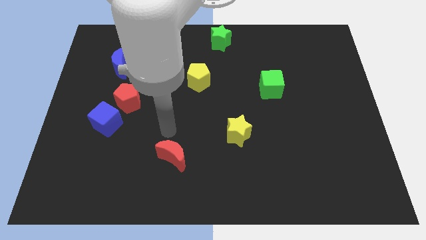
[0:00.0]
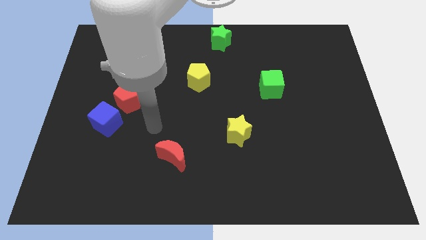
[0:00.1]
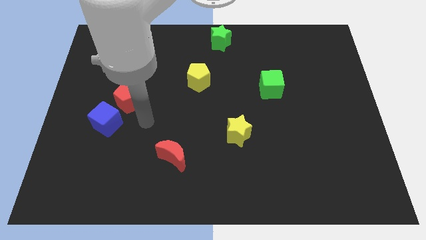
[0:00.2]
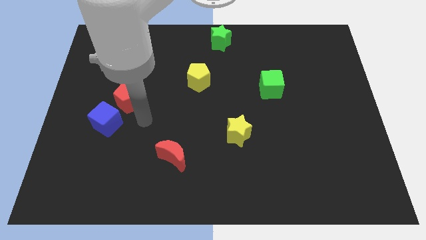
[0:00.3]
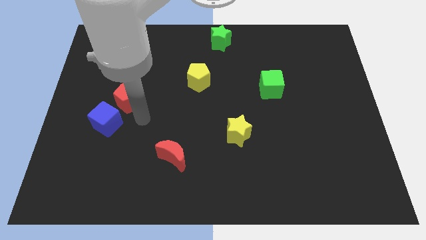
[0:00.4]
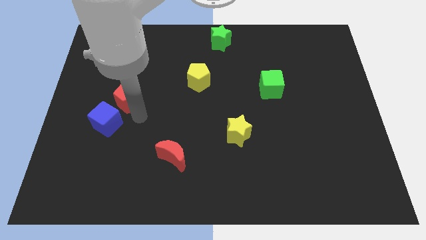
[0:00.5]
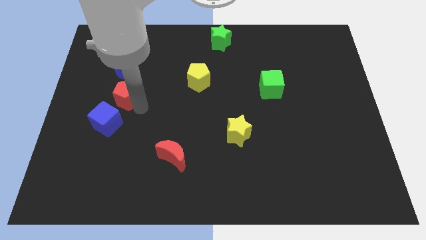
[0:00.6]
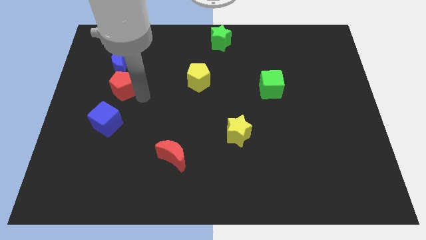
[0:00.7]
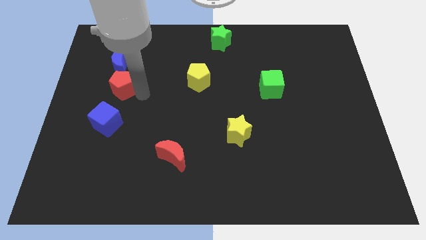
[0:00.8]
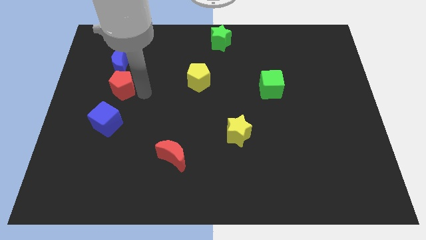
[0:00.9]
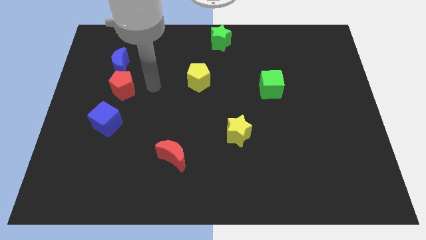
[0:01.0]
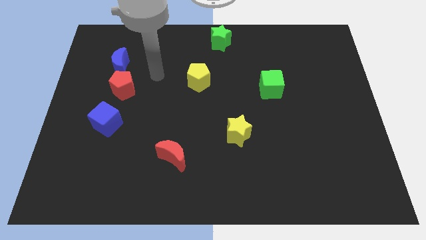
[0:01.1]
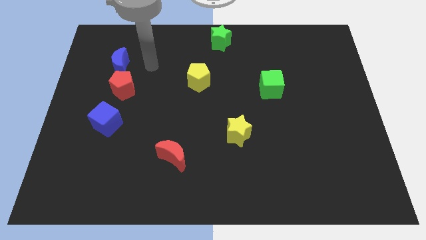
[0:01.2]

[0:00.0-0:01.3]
push the red pentagon slightly towards the blue crescent

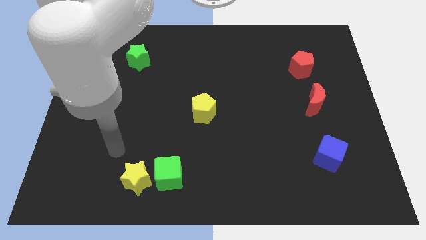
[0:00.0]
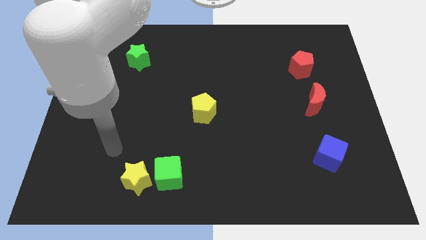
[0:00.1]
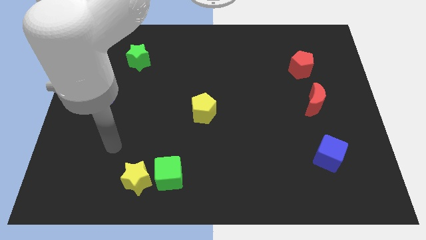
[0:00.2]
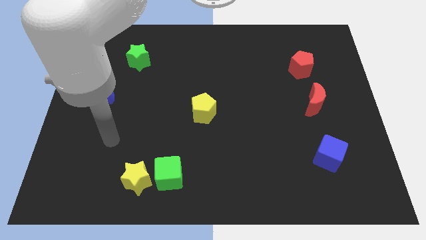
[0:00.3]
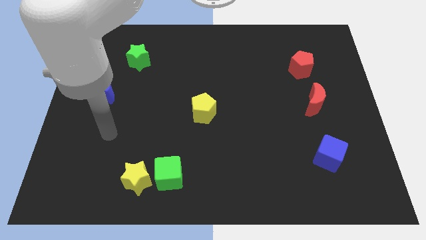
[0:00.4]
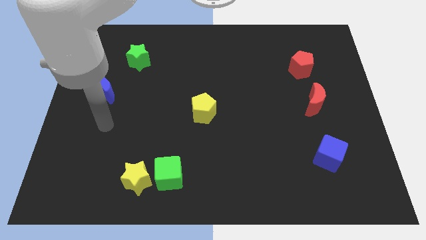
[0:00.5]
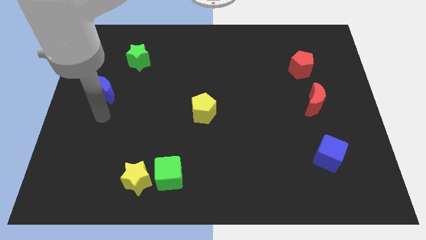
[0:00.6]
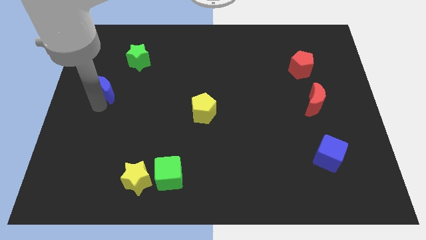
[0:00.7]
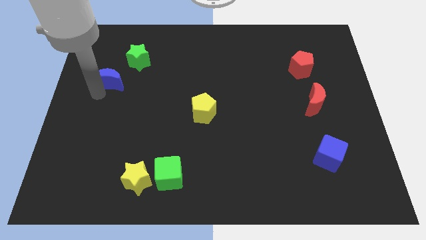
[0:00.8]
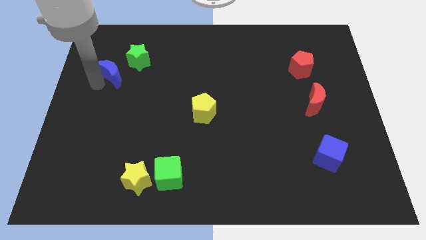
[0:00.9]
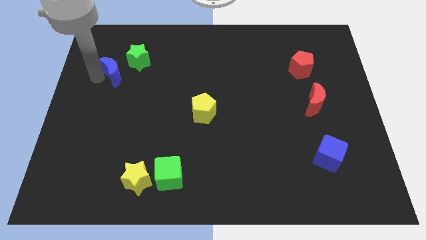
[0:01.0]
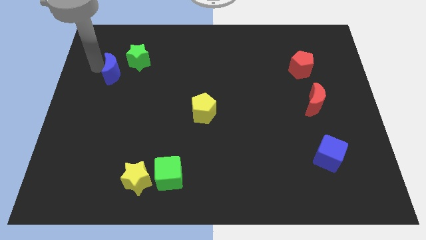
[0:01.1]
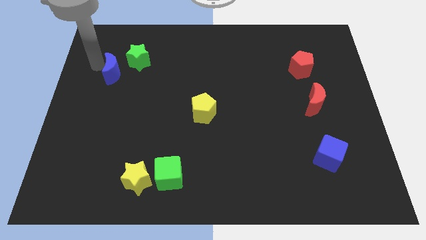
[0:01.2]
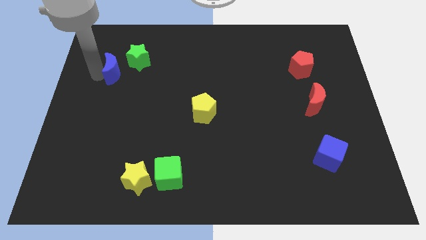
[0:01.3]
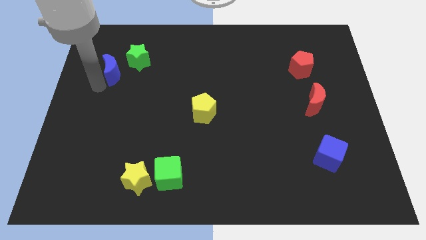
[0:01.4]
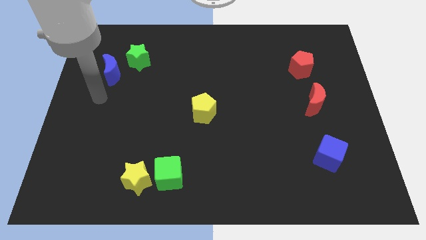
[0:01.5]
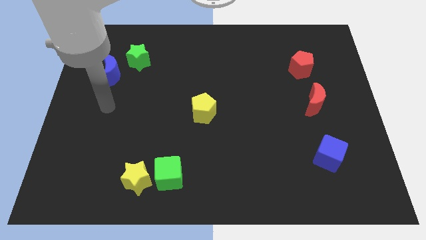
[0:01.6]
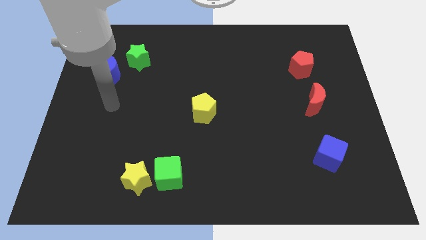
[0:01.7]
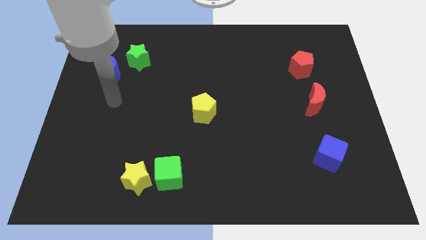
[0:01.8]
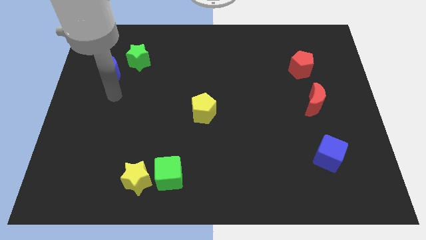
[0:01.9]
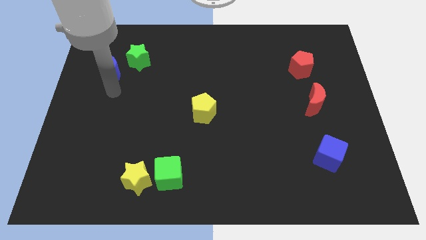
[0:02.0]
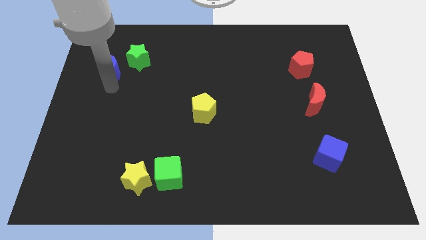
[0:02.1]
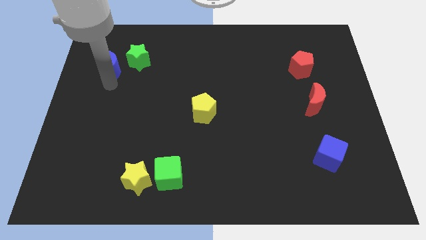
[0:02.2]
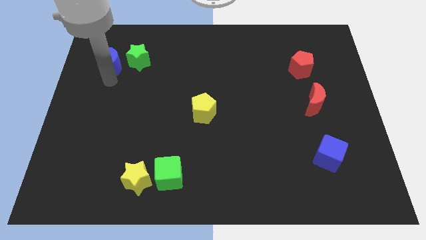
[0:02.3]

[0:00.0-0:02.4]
push the blue crescent to the left of the green star

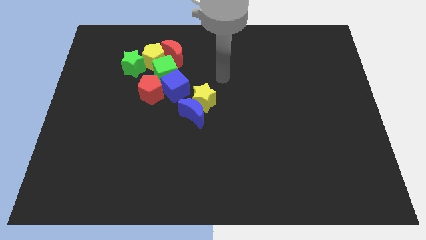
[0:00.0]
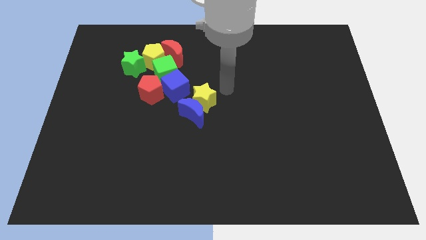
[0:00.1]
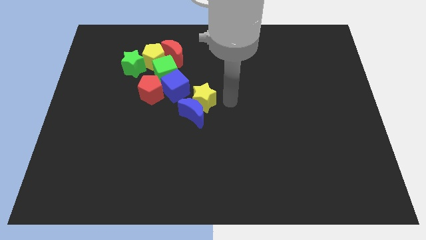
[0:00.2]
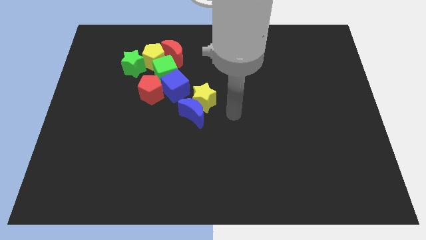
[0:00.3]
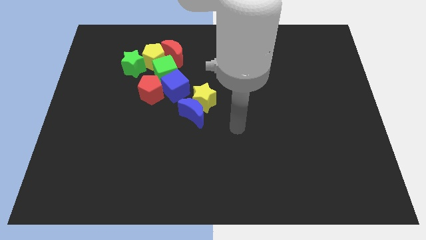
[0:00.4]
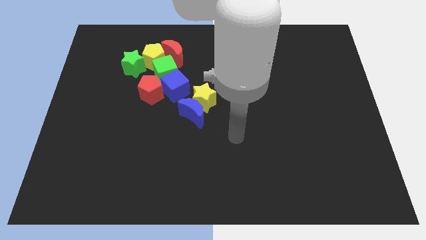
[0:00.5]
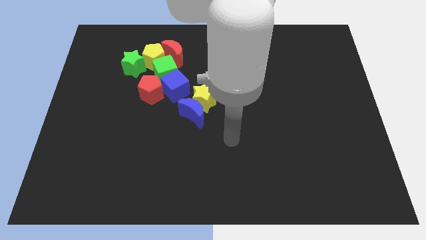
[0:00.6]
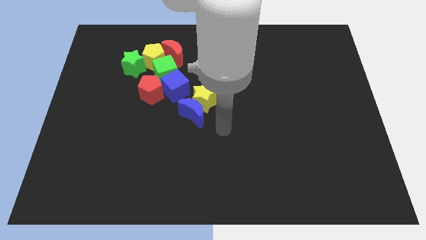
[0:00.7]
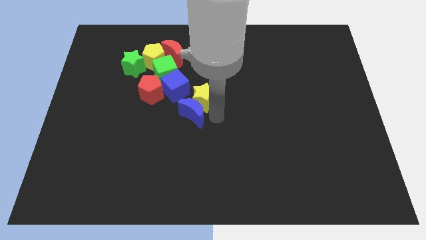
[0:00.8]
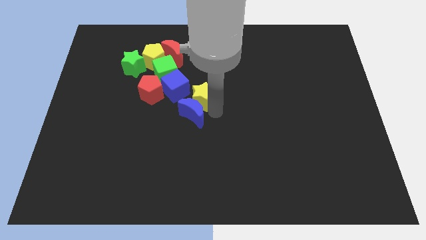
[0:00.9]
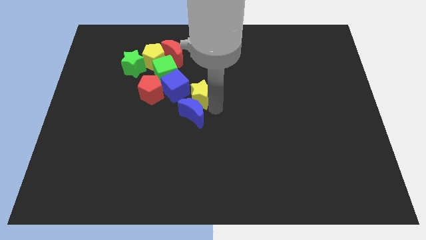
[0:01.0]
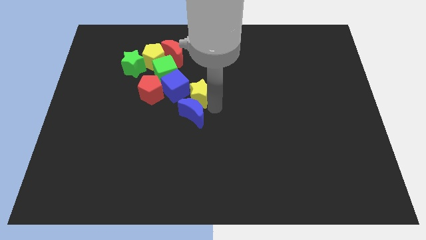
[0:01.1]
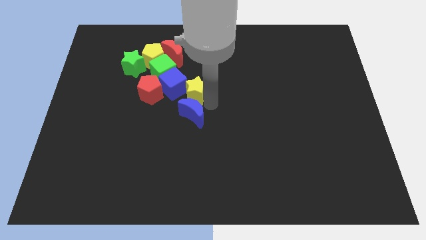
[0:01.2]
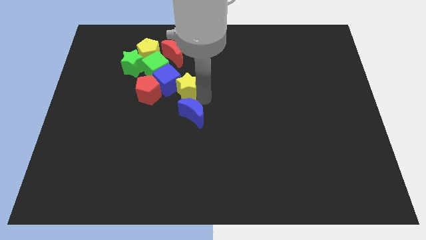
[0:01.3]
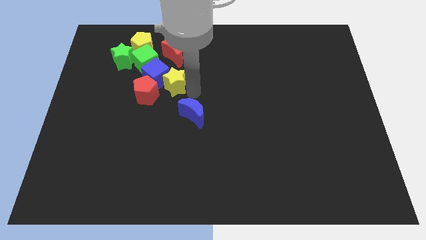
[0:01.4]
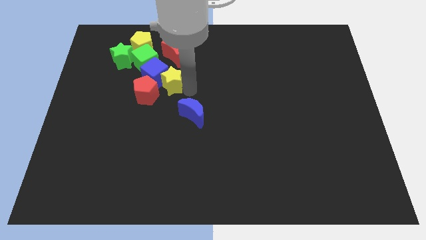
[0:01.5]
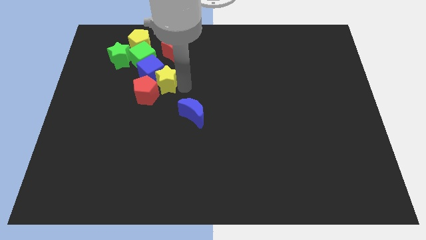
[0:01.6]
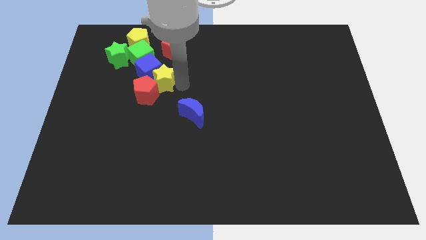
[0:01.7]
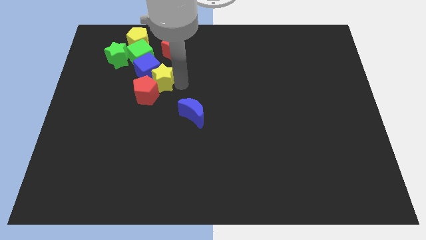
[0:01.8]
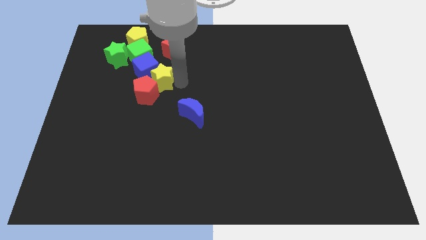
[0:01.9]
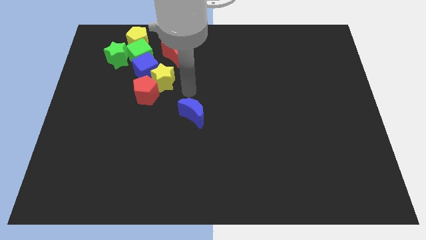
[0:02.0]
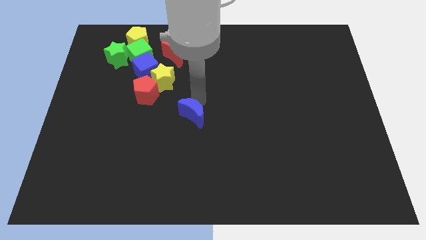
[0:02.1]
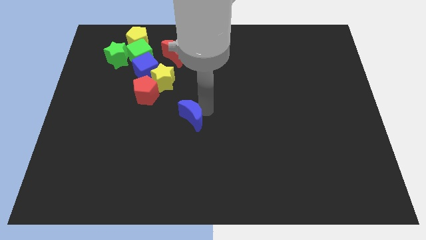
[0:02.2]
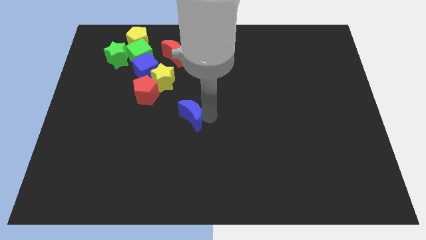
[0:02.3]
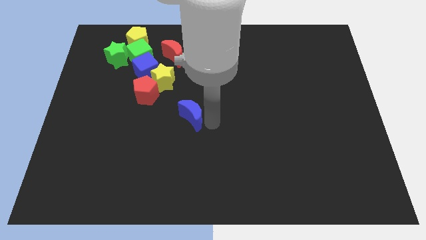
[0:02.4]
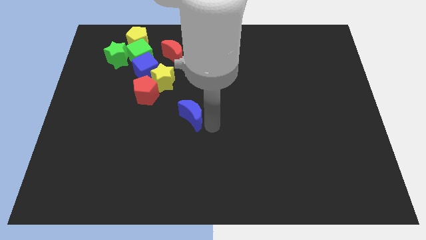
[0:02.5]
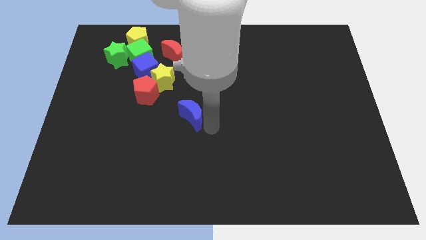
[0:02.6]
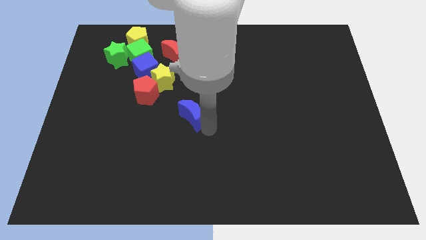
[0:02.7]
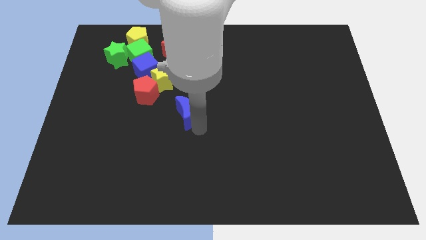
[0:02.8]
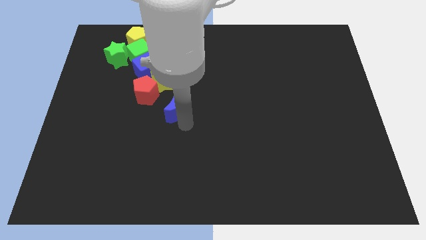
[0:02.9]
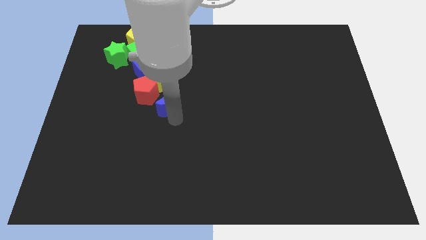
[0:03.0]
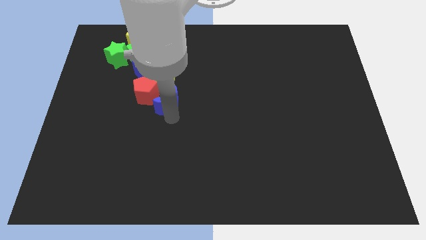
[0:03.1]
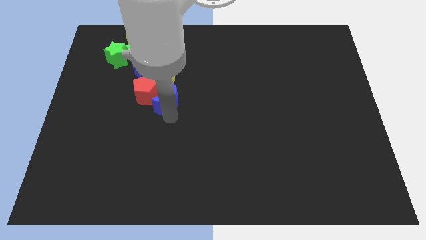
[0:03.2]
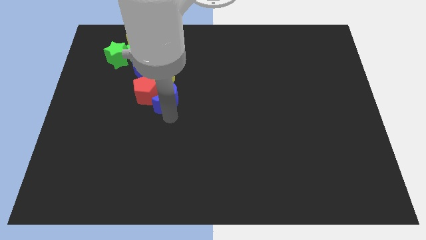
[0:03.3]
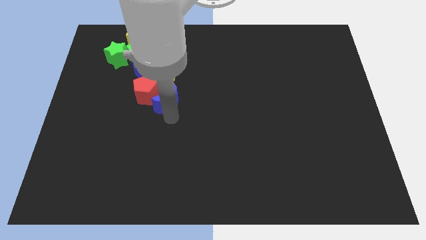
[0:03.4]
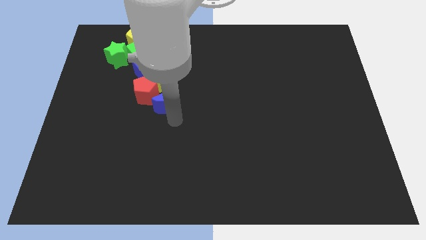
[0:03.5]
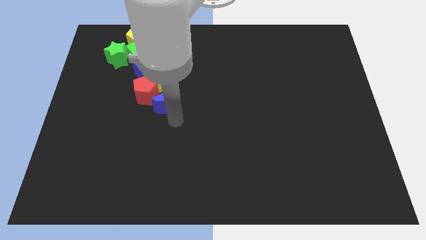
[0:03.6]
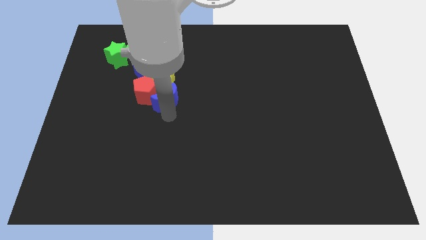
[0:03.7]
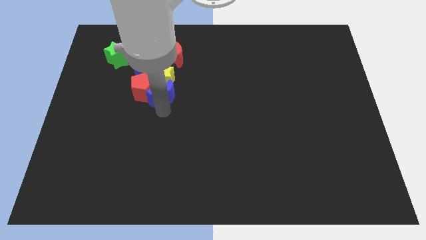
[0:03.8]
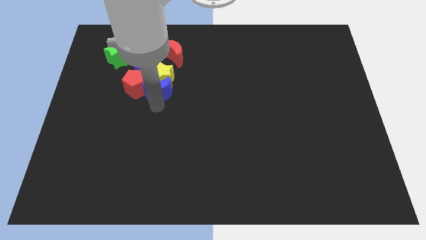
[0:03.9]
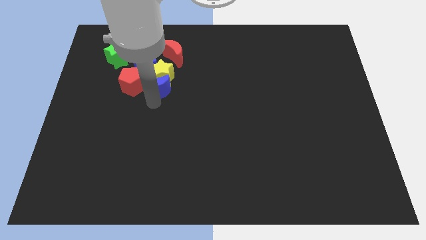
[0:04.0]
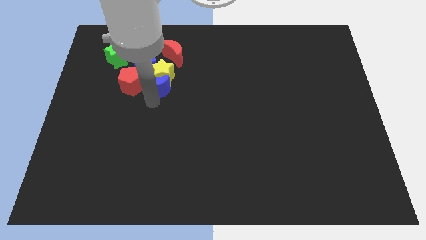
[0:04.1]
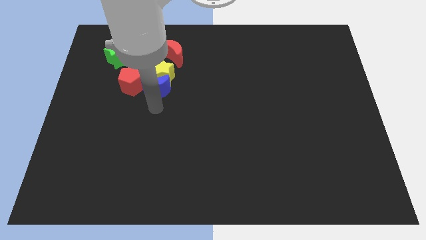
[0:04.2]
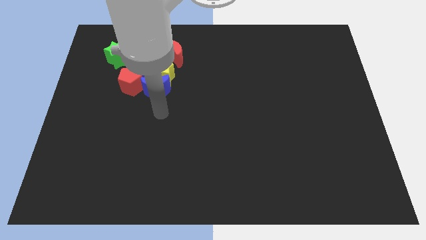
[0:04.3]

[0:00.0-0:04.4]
push the blue moon towards top left side of the board

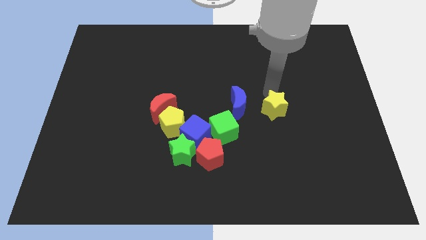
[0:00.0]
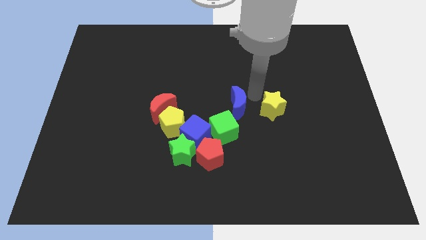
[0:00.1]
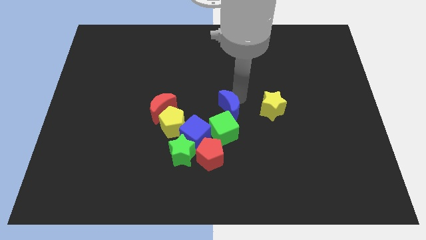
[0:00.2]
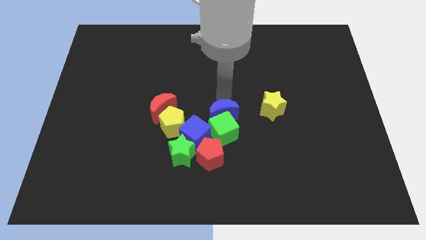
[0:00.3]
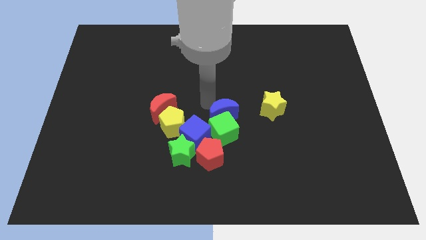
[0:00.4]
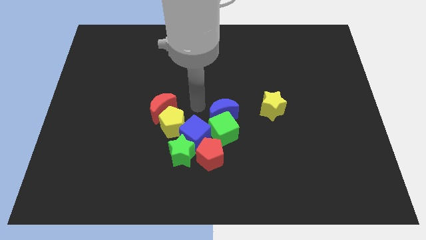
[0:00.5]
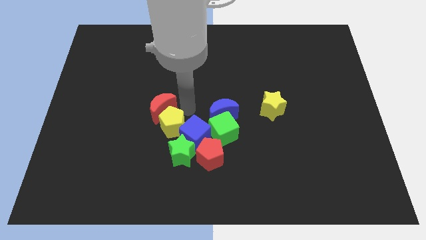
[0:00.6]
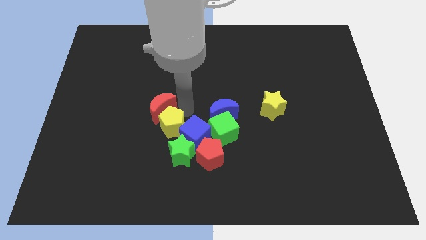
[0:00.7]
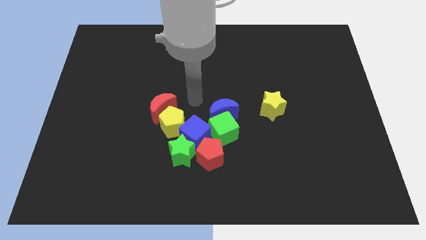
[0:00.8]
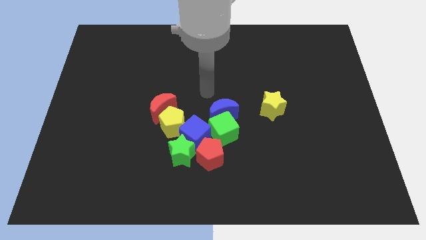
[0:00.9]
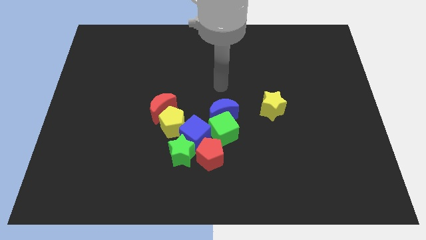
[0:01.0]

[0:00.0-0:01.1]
push the blue moon into the group of blocks
